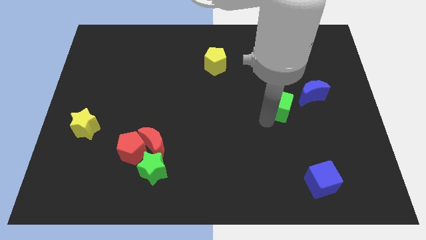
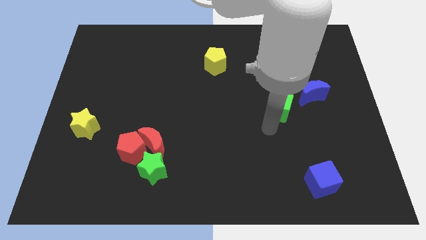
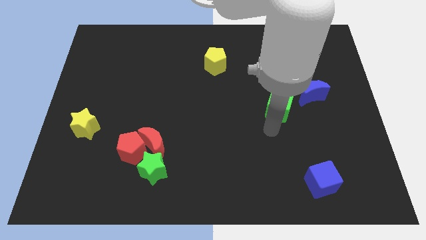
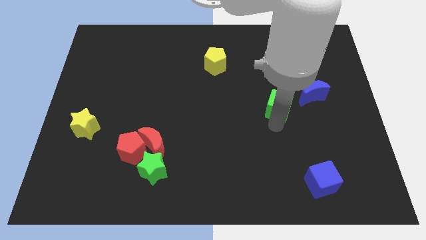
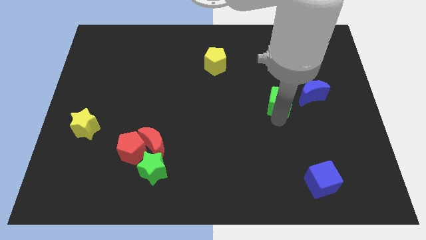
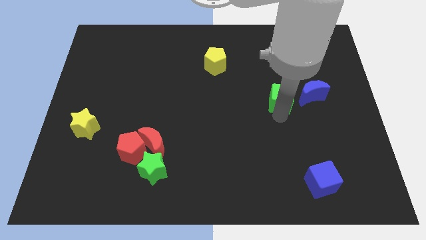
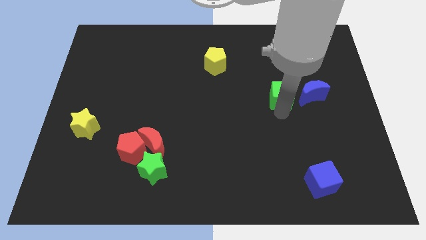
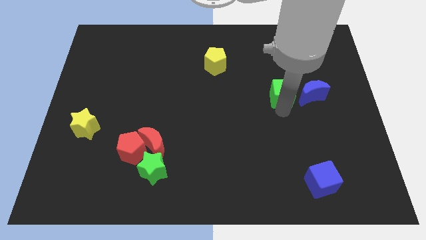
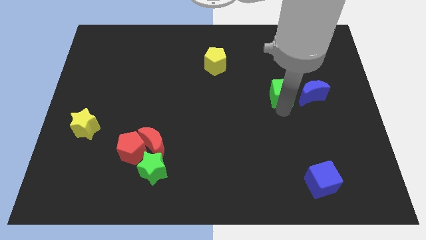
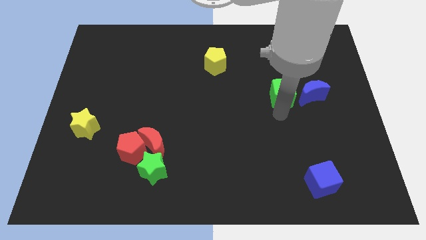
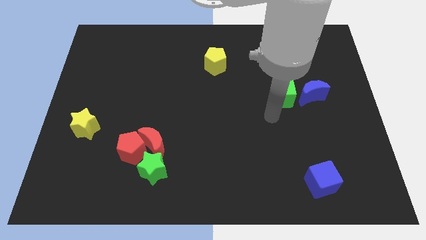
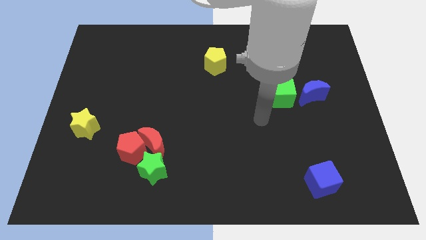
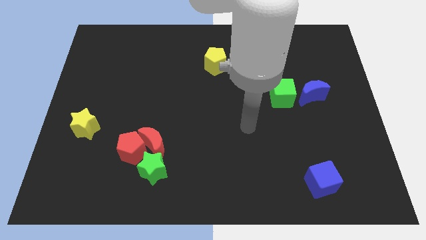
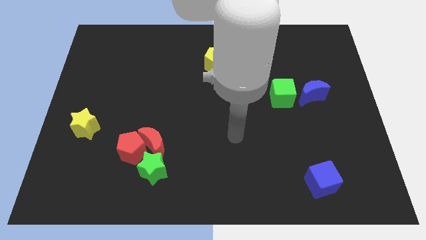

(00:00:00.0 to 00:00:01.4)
move the green cube left to the blue crescent

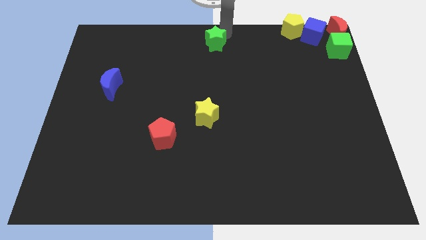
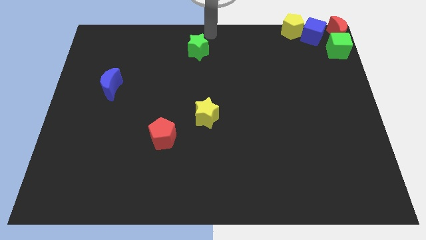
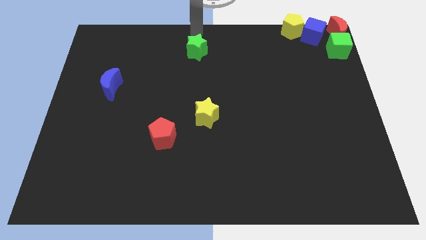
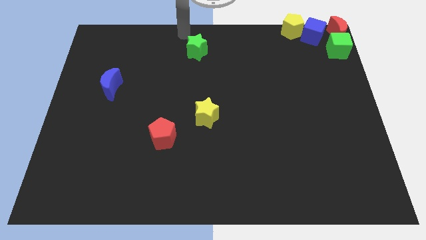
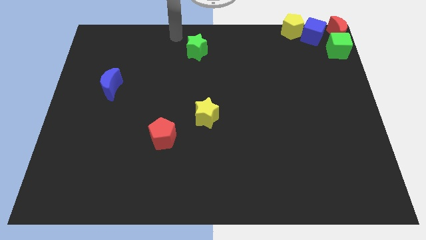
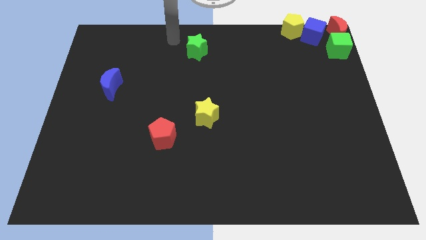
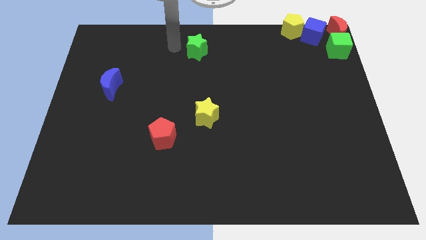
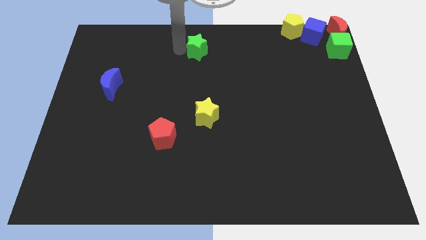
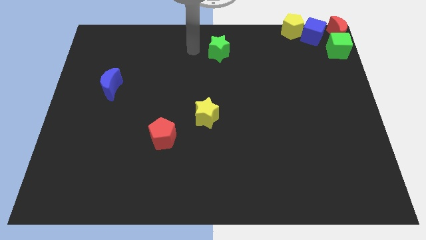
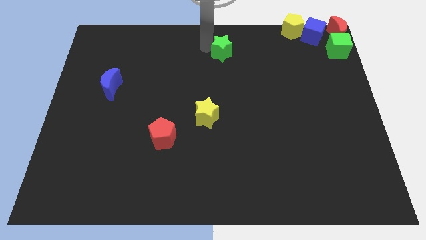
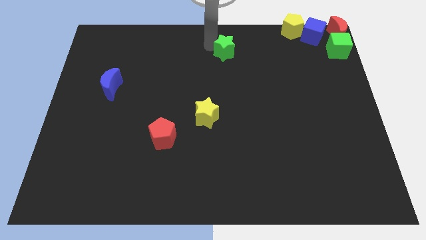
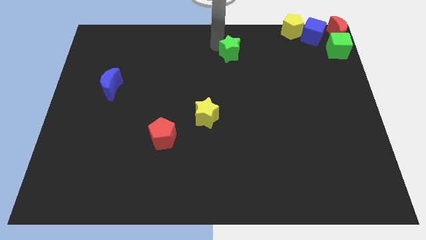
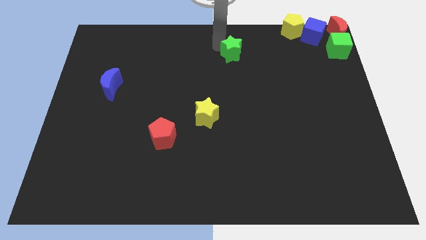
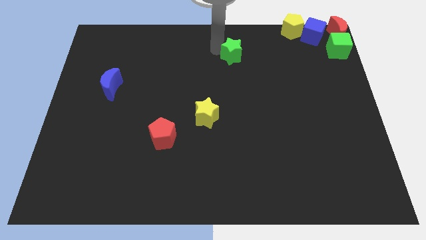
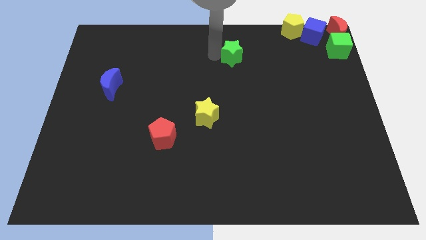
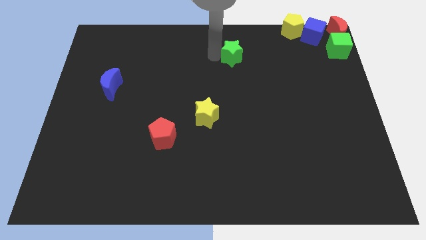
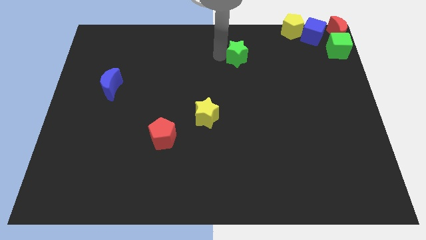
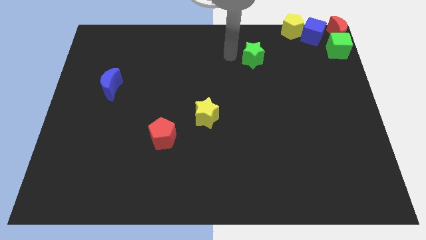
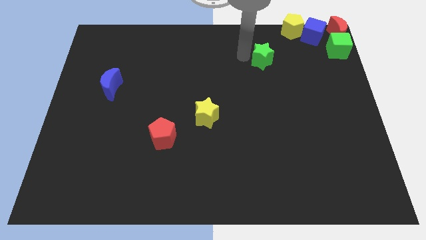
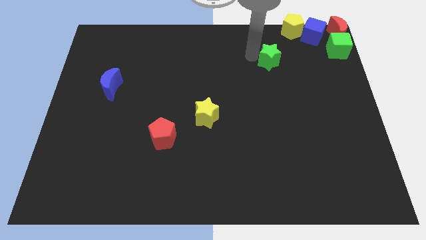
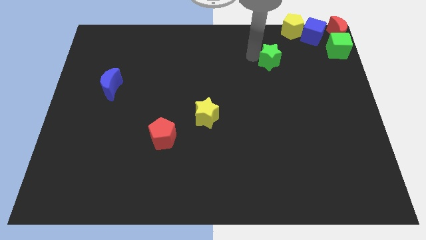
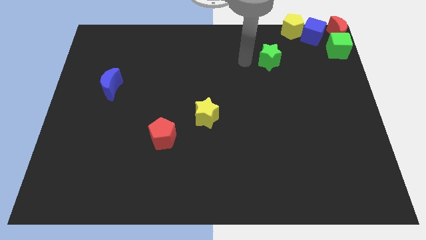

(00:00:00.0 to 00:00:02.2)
move green star towards the yellow pentagon

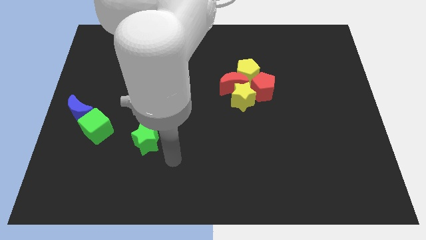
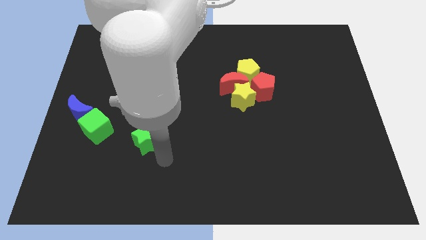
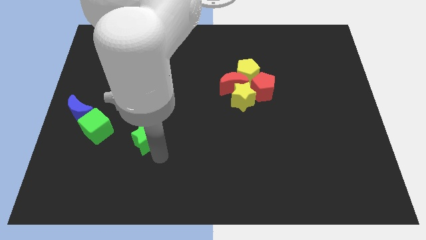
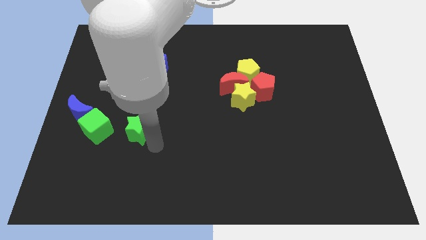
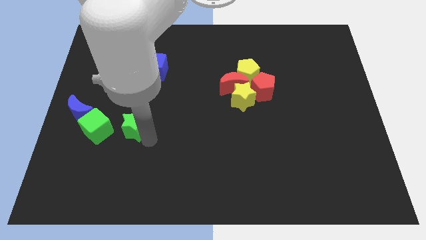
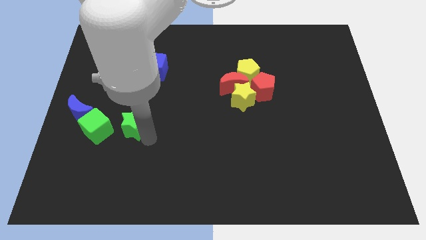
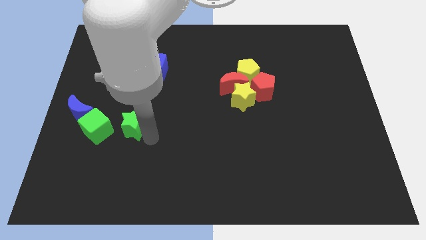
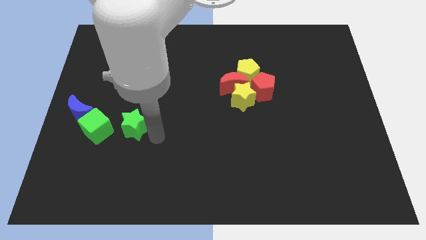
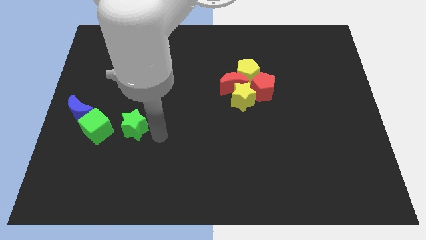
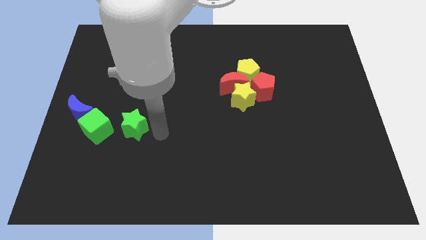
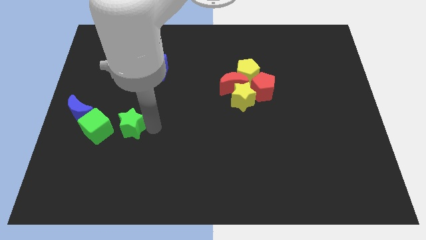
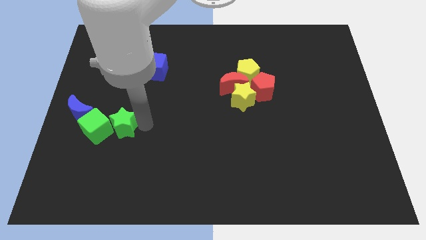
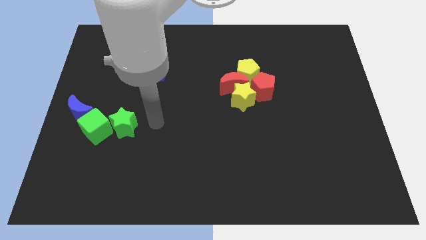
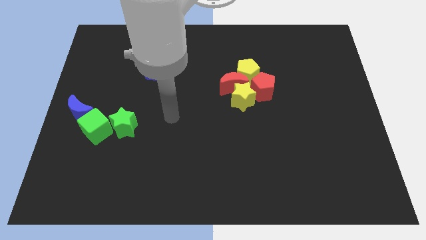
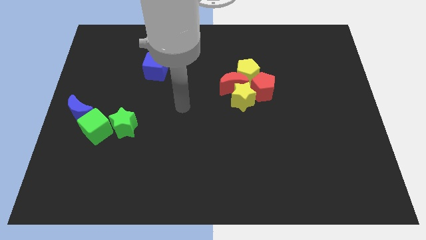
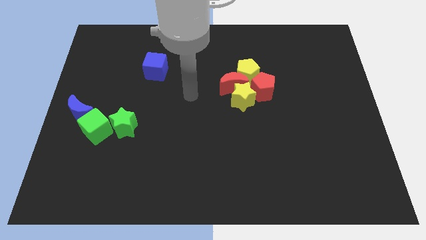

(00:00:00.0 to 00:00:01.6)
move the green star into the green cube

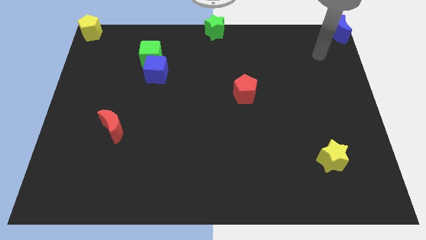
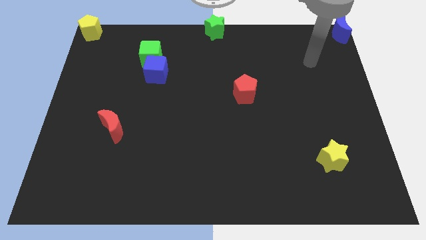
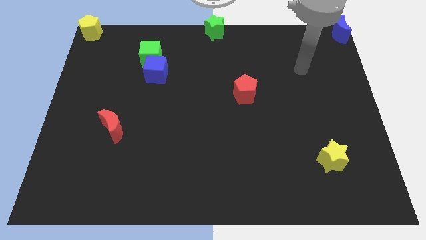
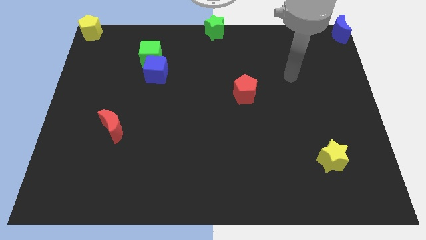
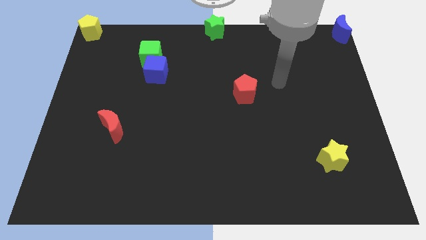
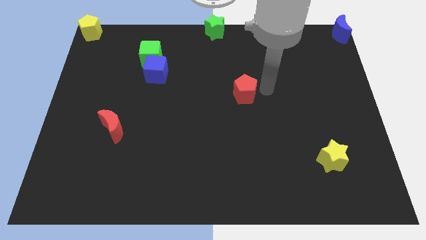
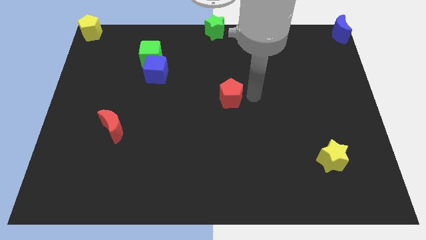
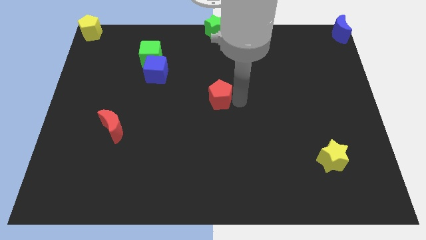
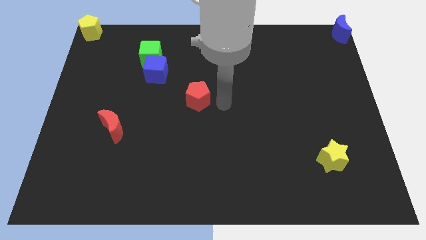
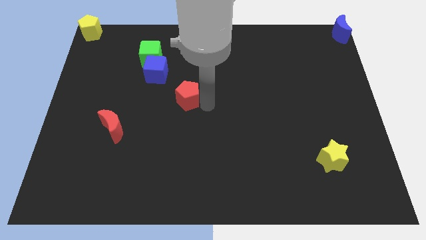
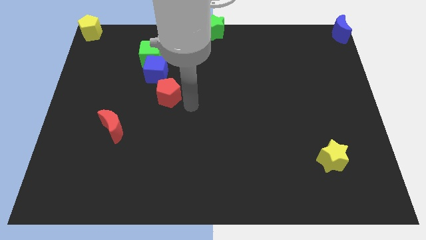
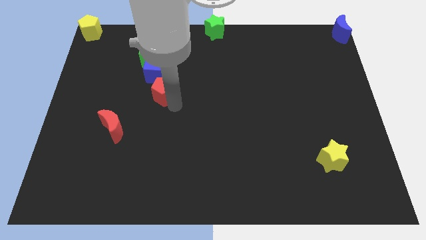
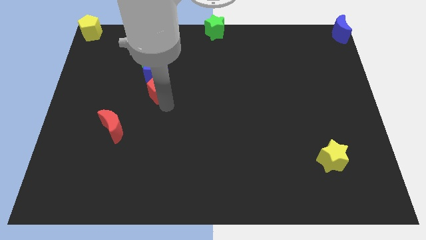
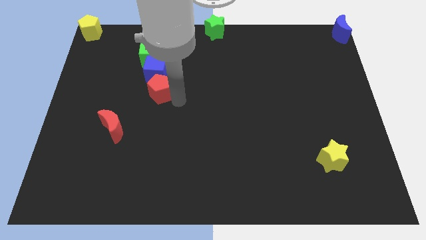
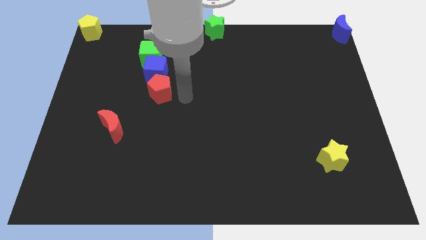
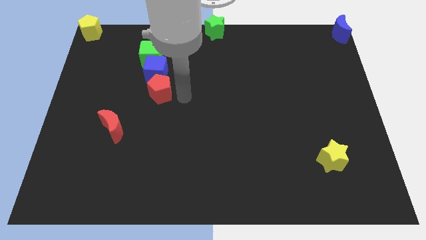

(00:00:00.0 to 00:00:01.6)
move the red pentagon below the blue cube

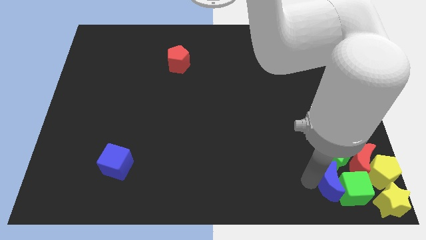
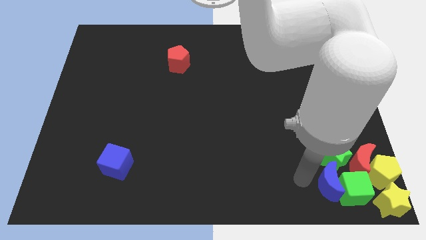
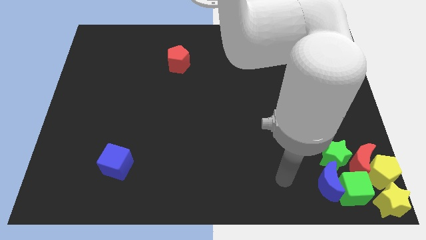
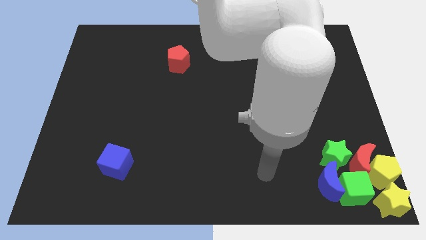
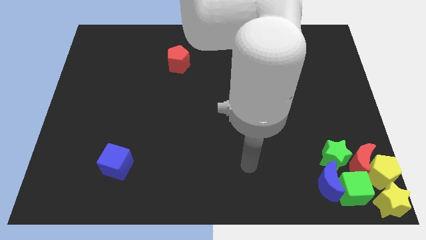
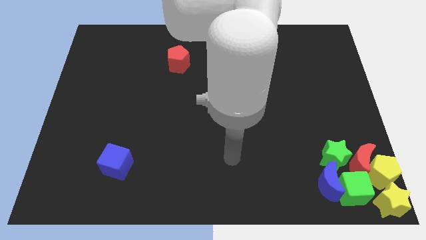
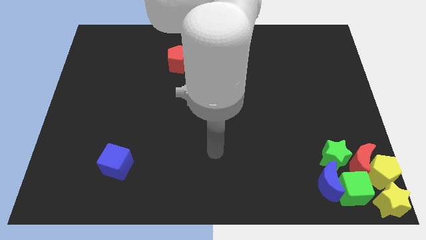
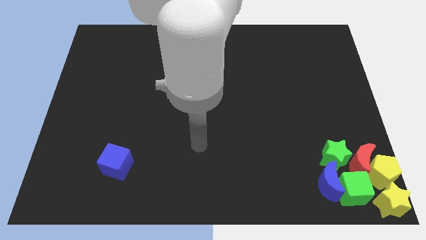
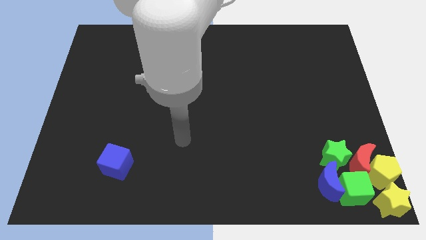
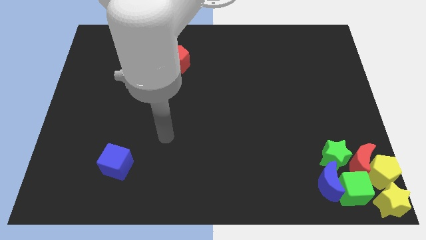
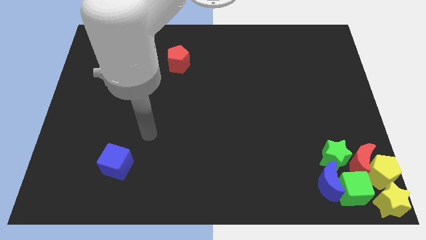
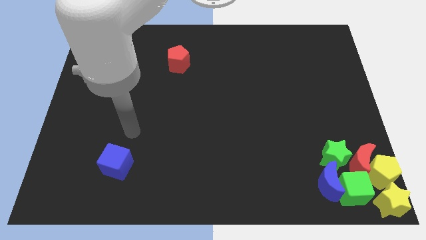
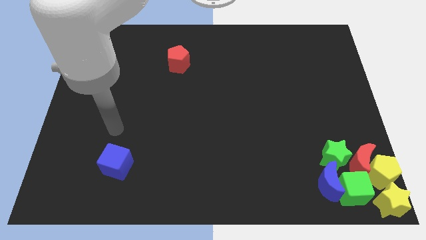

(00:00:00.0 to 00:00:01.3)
point your arm at the top of the blue cube

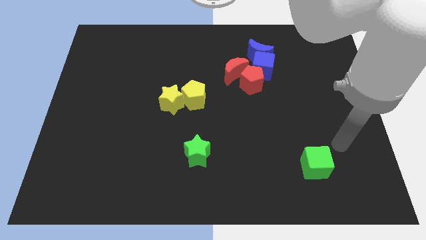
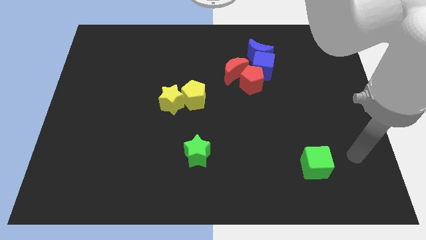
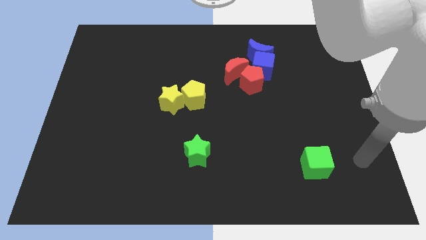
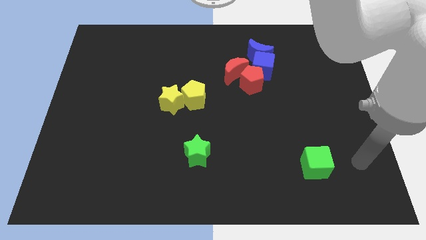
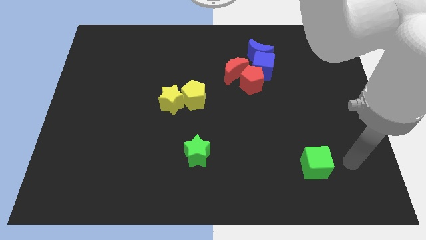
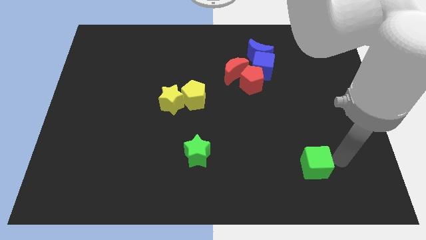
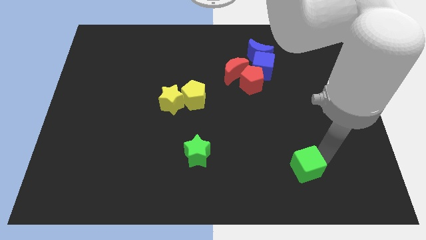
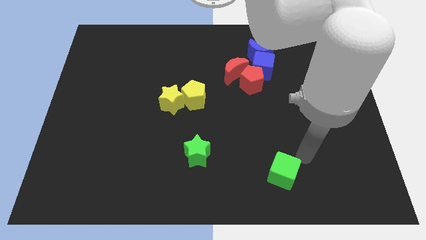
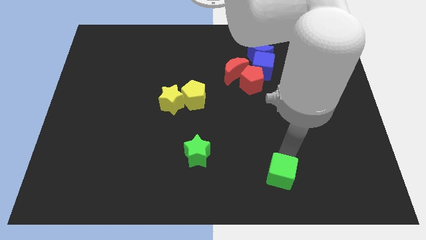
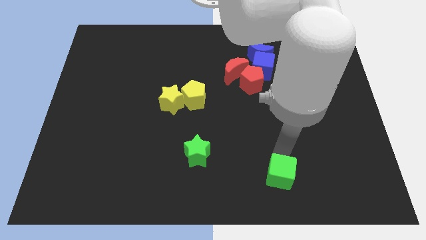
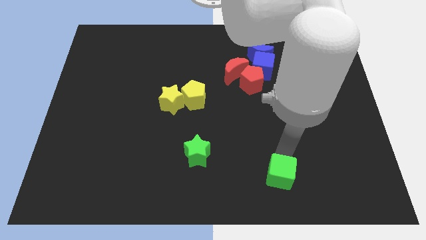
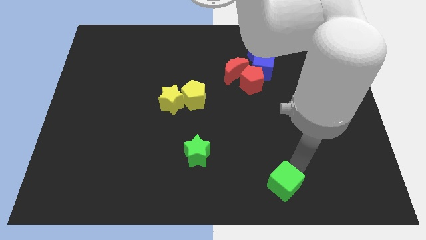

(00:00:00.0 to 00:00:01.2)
push the green cube to the left of the board
